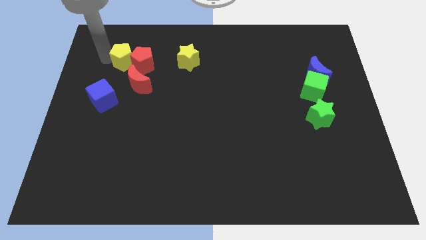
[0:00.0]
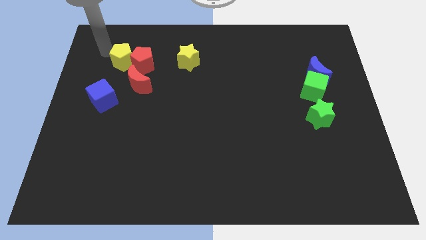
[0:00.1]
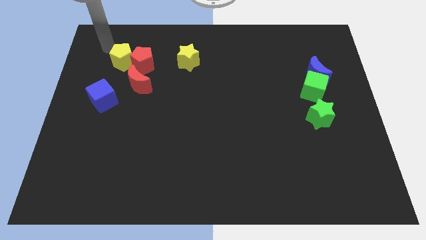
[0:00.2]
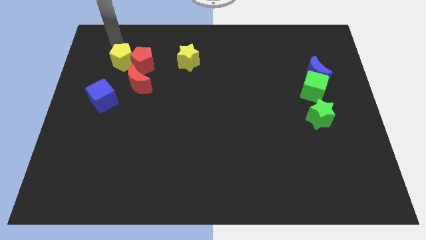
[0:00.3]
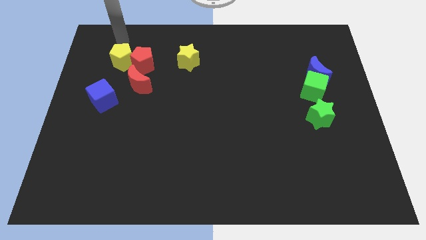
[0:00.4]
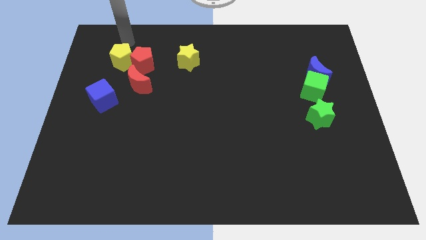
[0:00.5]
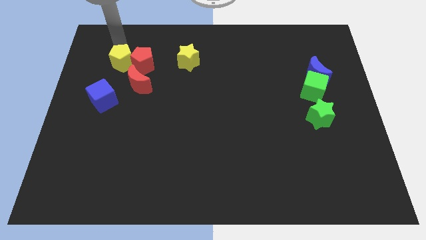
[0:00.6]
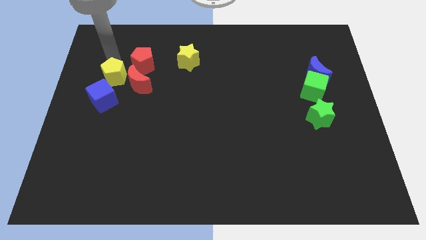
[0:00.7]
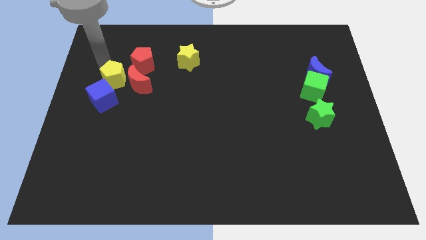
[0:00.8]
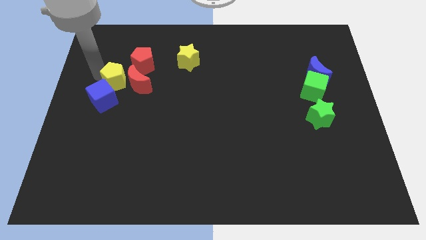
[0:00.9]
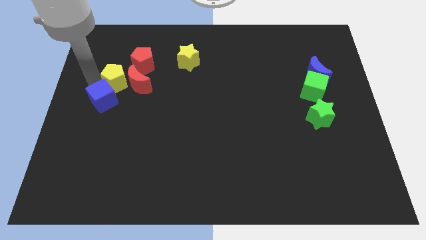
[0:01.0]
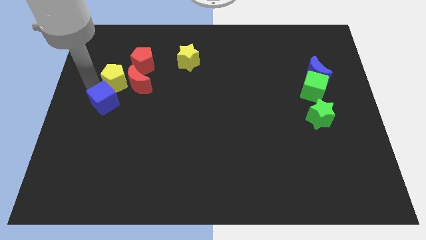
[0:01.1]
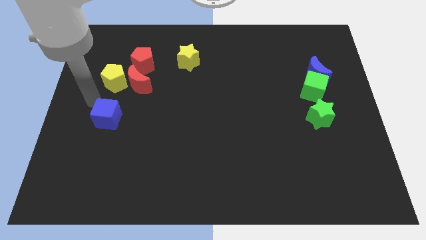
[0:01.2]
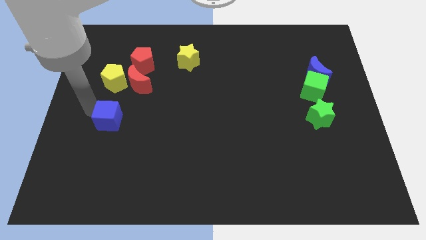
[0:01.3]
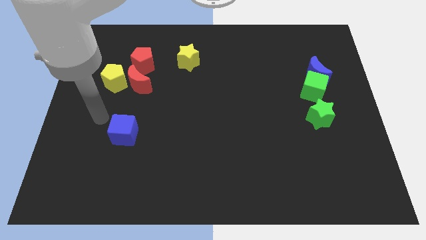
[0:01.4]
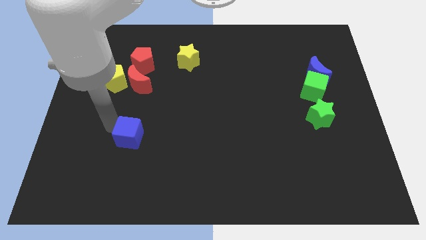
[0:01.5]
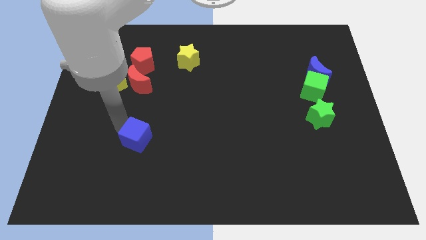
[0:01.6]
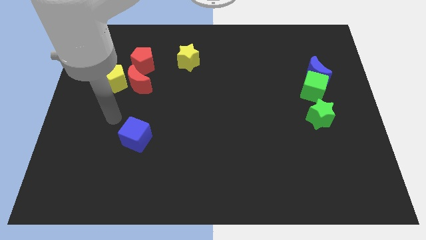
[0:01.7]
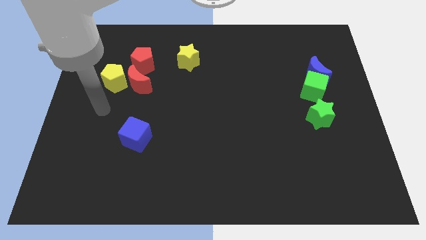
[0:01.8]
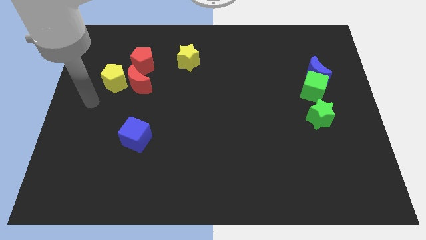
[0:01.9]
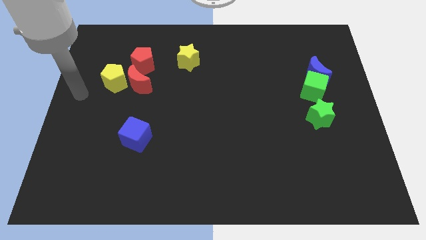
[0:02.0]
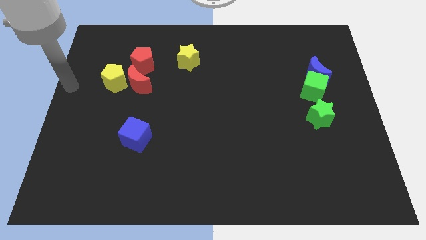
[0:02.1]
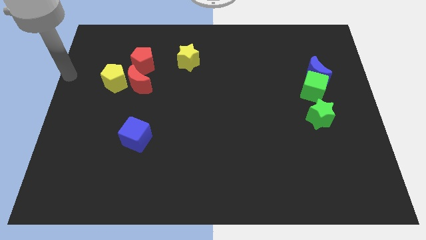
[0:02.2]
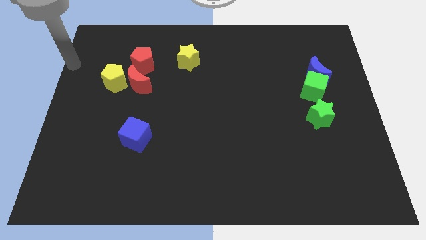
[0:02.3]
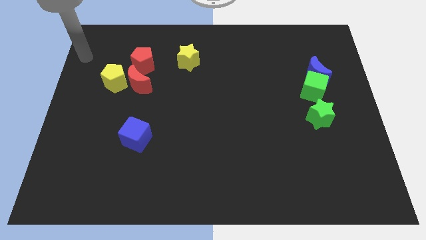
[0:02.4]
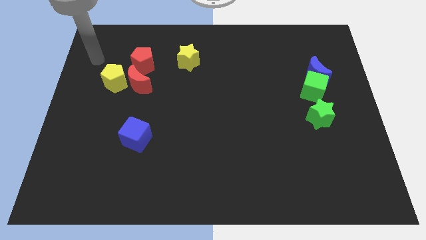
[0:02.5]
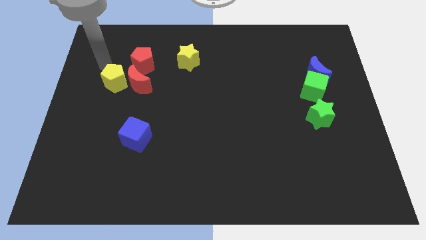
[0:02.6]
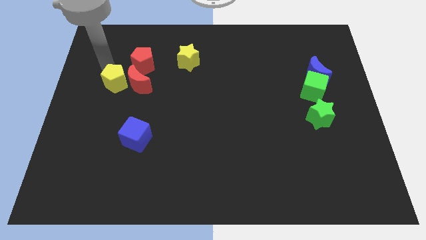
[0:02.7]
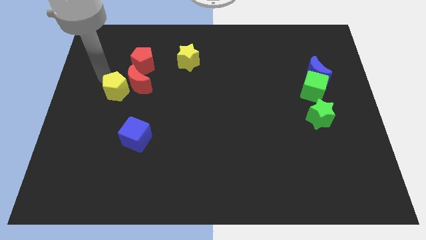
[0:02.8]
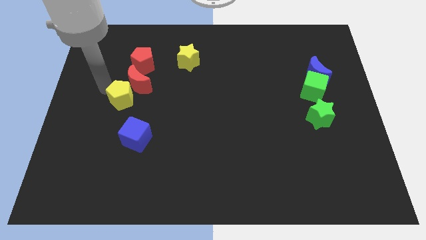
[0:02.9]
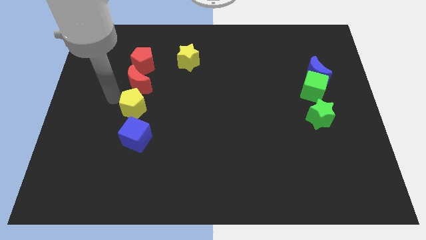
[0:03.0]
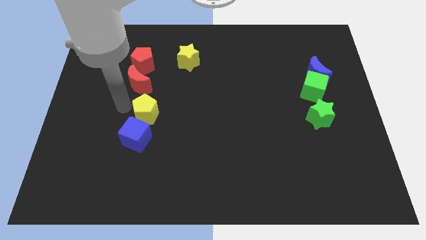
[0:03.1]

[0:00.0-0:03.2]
move the blue cube and yellow pentagon vertical to each other

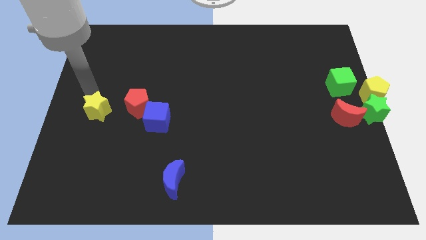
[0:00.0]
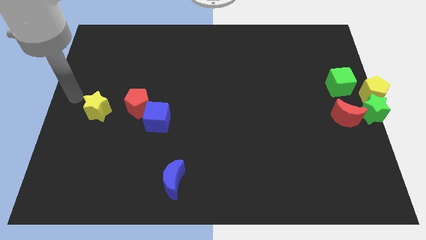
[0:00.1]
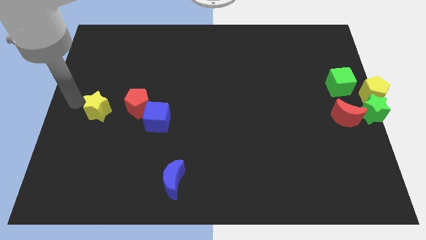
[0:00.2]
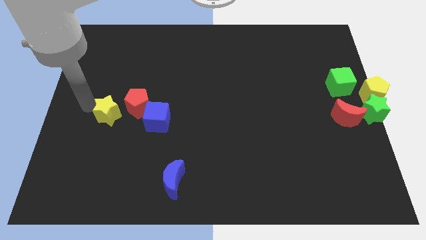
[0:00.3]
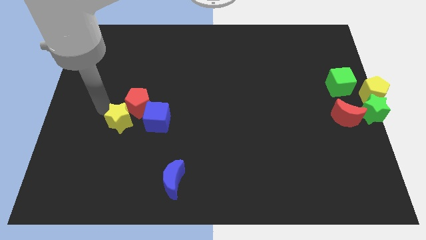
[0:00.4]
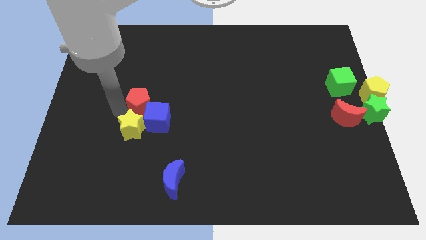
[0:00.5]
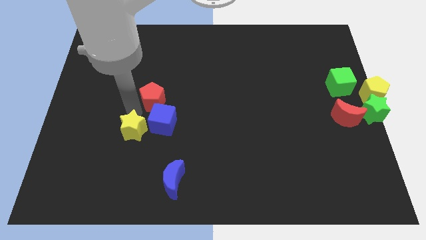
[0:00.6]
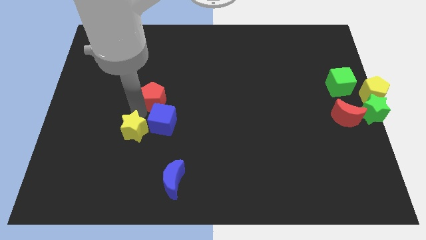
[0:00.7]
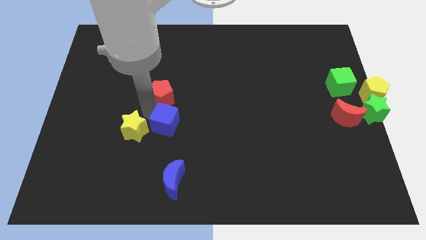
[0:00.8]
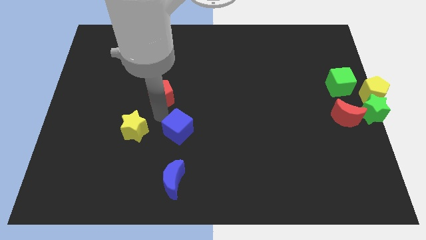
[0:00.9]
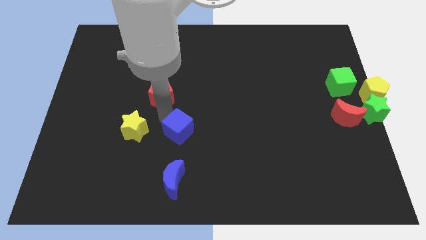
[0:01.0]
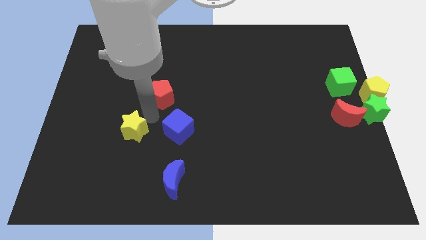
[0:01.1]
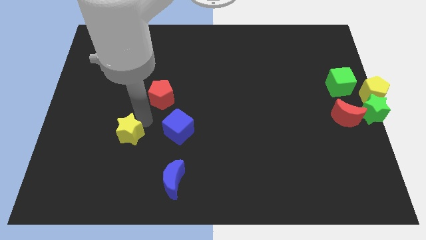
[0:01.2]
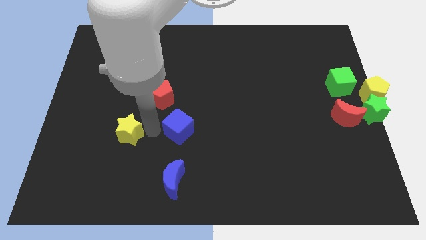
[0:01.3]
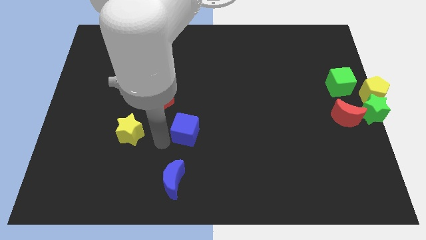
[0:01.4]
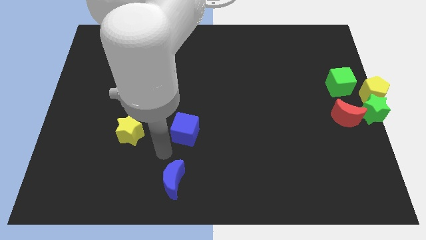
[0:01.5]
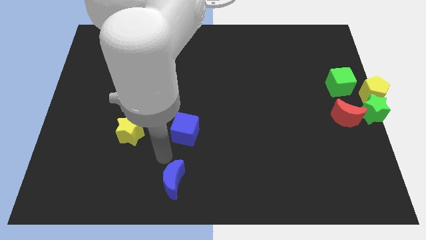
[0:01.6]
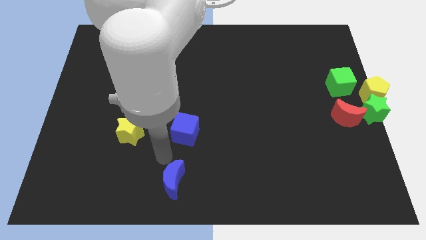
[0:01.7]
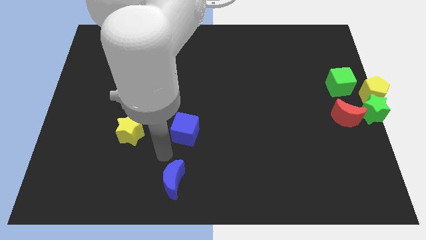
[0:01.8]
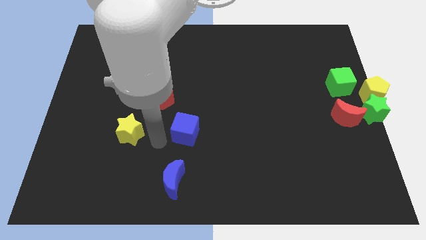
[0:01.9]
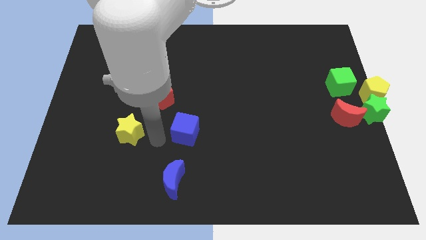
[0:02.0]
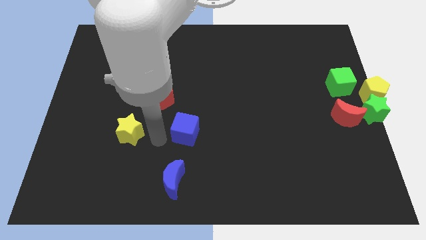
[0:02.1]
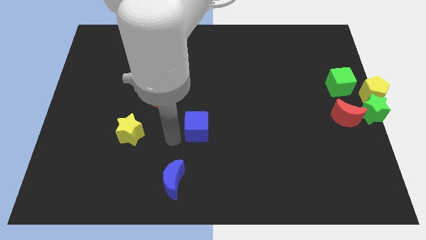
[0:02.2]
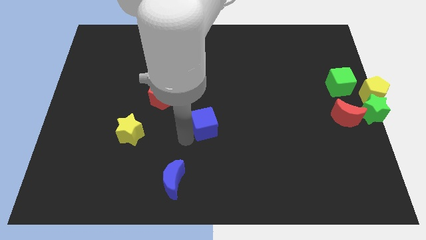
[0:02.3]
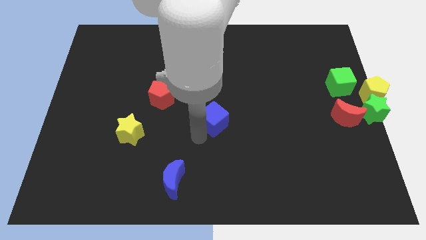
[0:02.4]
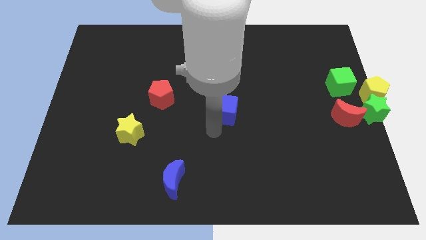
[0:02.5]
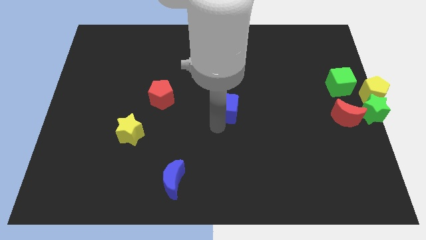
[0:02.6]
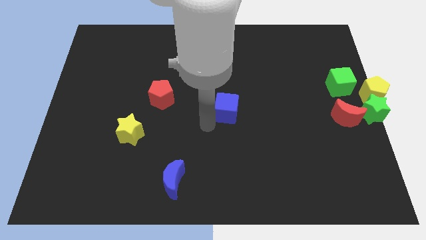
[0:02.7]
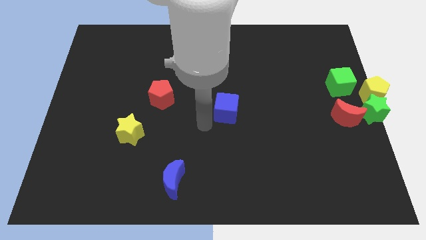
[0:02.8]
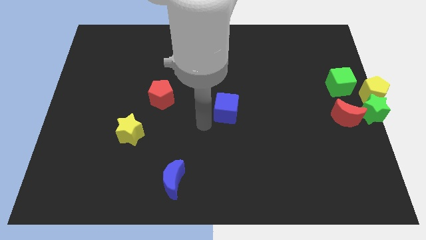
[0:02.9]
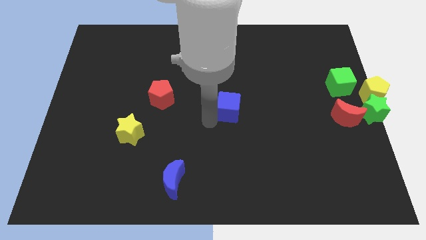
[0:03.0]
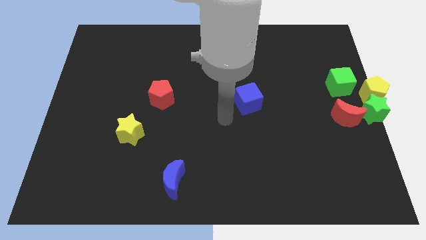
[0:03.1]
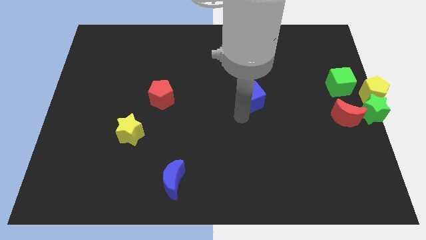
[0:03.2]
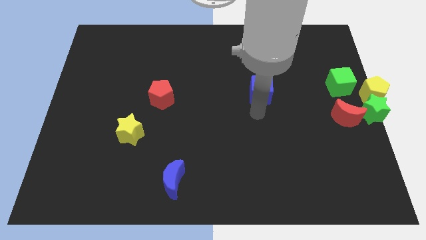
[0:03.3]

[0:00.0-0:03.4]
move the blue cube right to the red pentagon

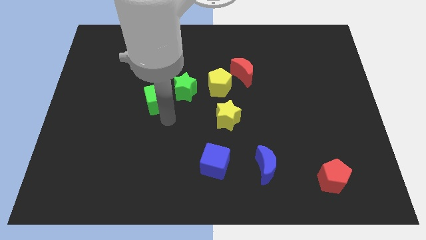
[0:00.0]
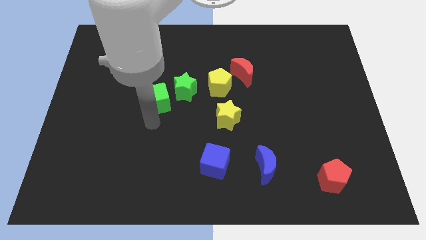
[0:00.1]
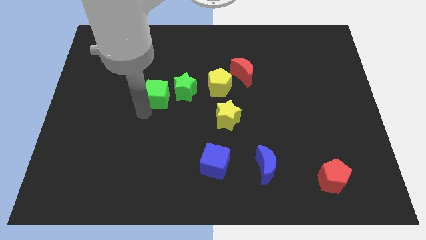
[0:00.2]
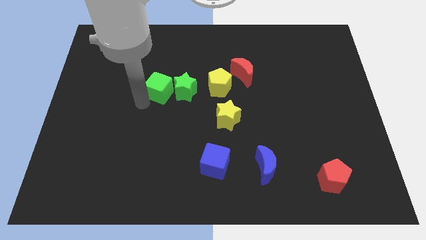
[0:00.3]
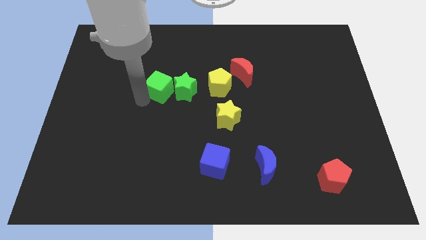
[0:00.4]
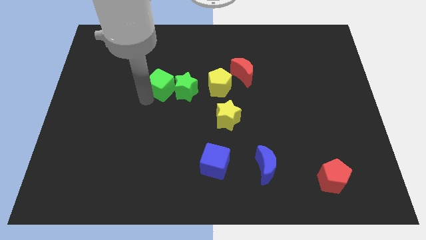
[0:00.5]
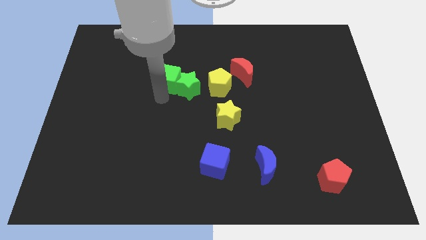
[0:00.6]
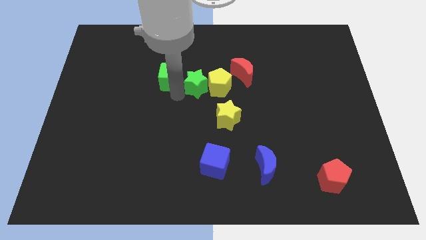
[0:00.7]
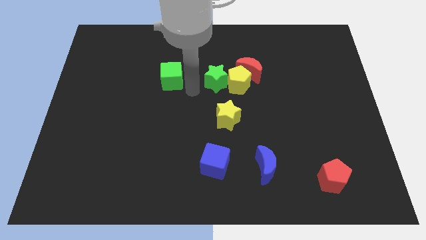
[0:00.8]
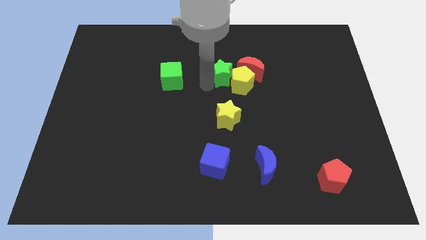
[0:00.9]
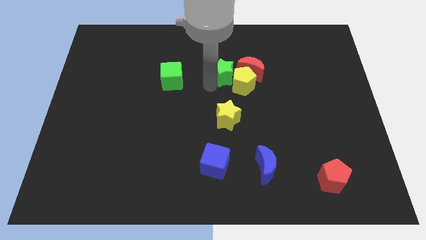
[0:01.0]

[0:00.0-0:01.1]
separate the green star from the green cube

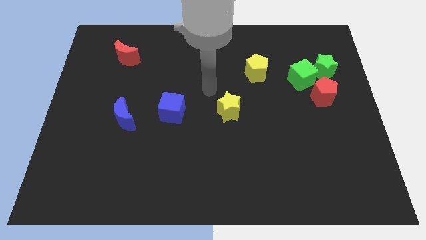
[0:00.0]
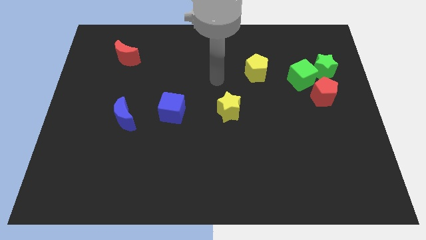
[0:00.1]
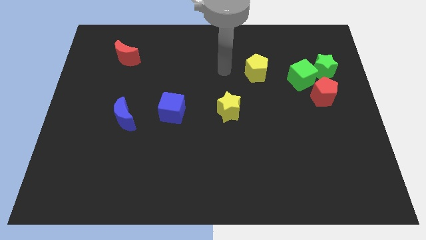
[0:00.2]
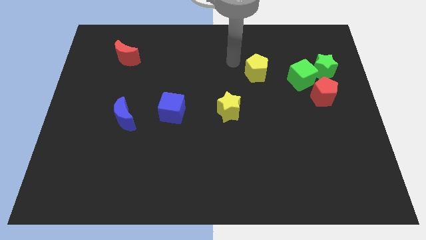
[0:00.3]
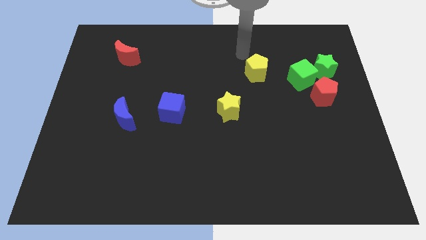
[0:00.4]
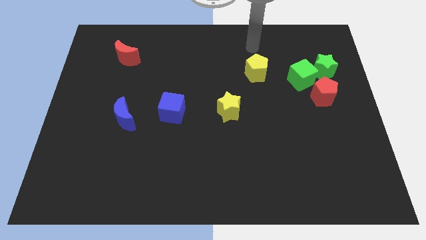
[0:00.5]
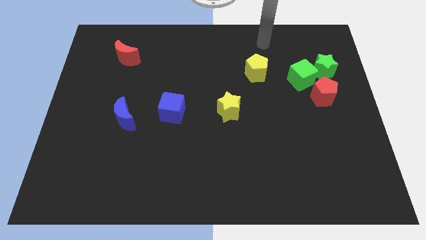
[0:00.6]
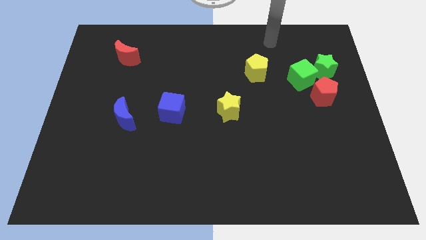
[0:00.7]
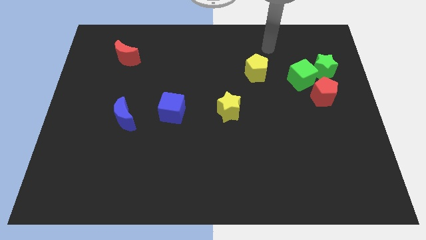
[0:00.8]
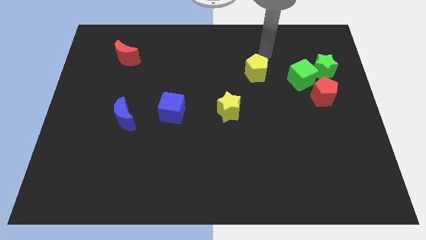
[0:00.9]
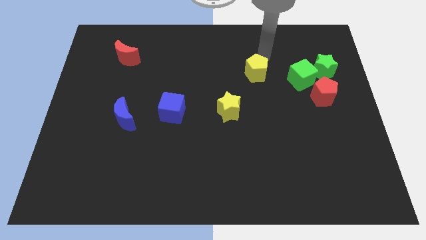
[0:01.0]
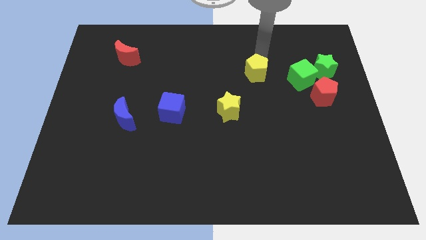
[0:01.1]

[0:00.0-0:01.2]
place your arm at the top of yellow star
